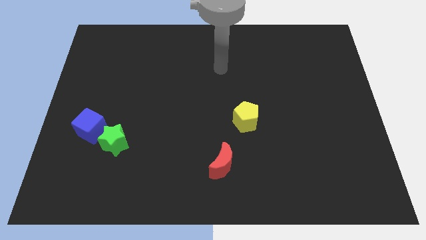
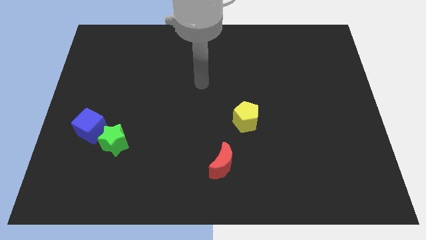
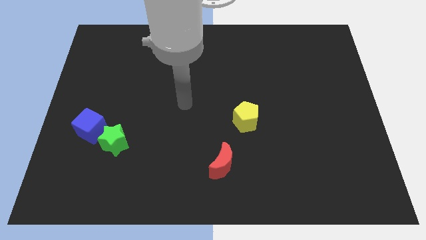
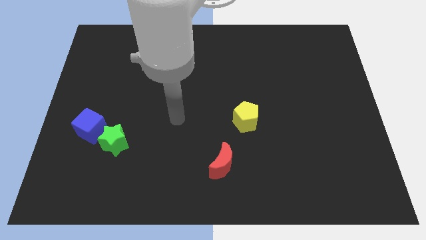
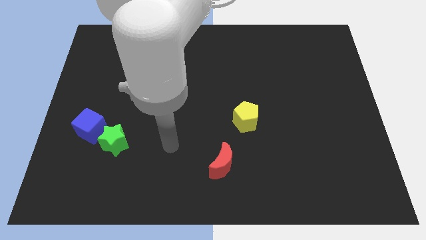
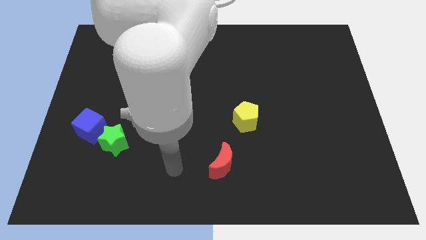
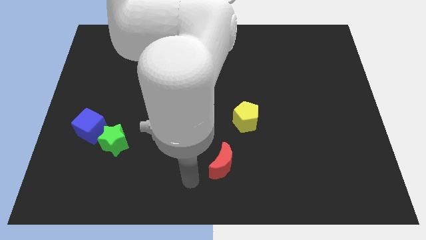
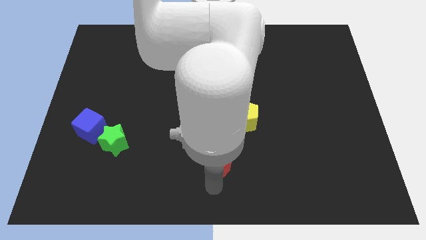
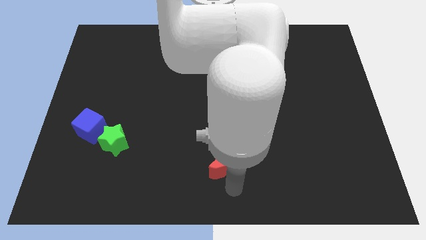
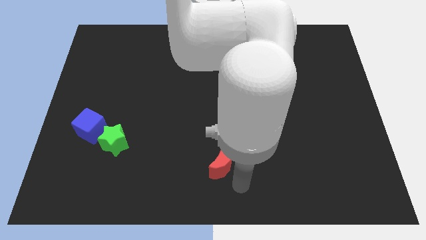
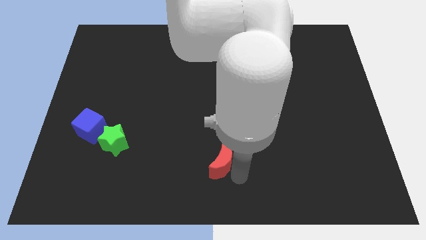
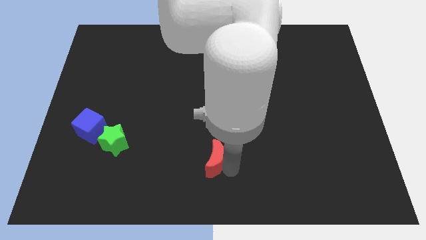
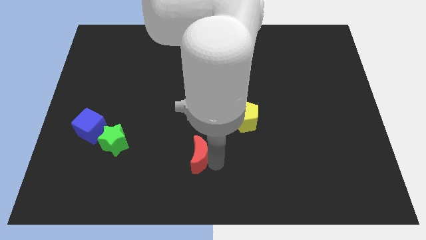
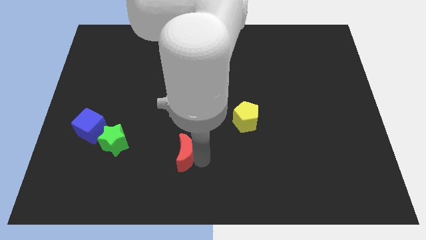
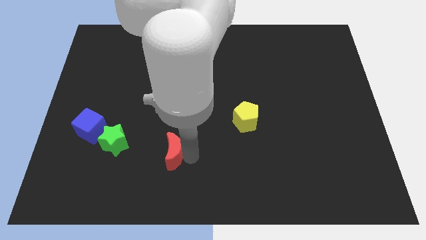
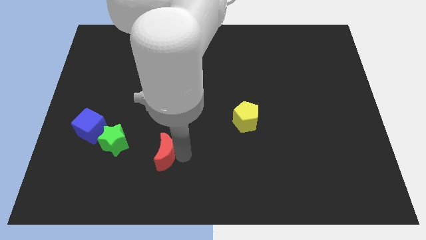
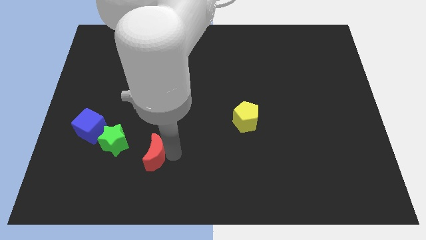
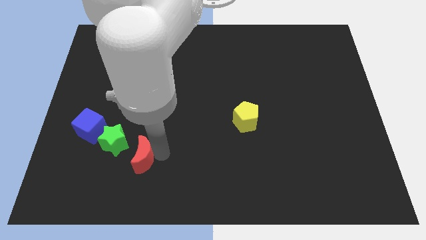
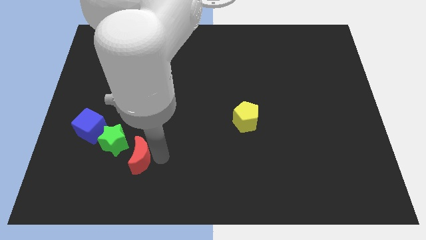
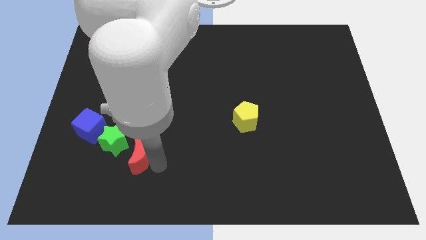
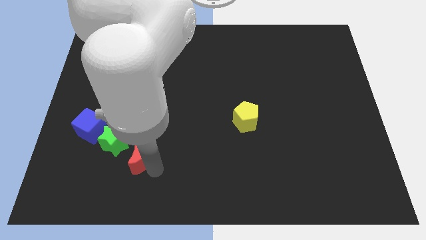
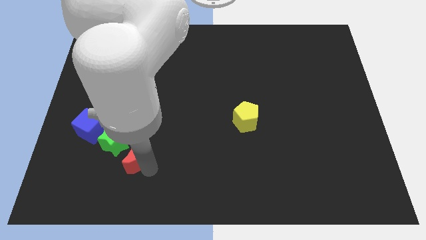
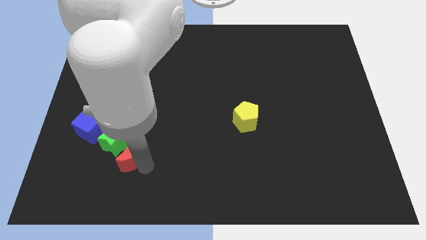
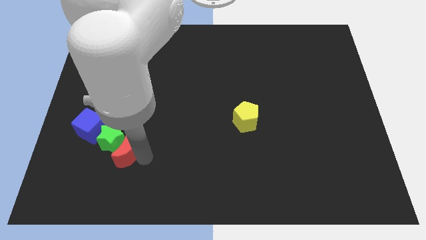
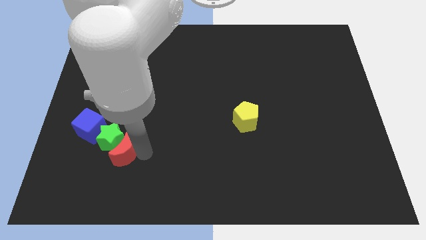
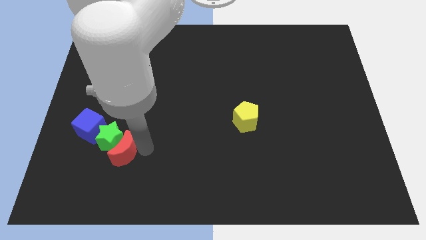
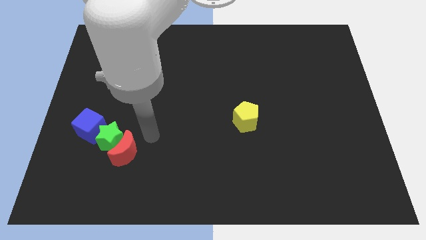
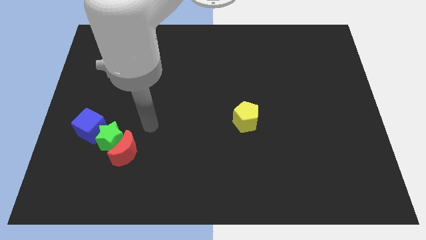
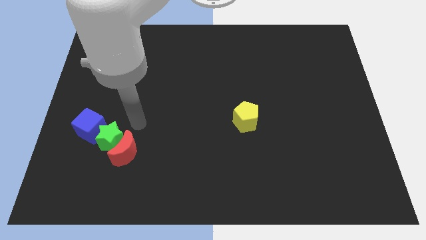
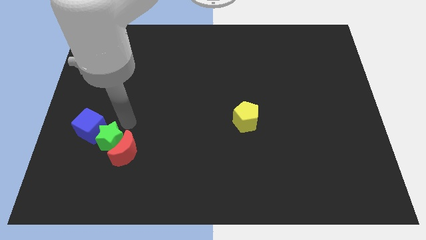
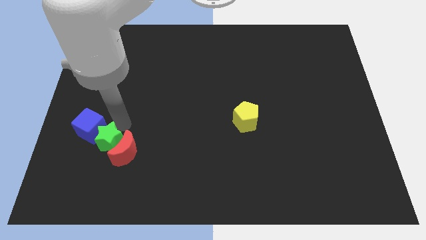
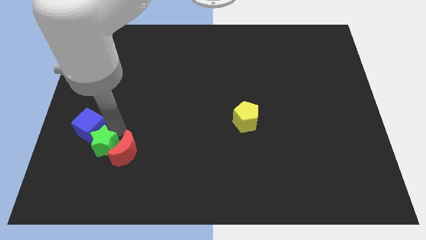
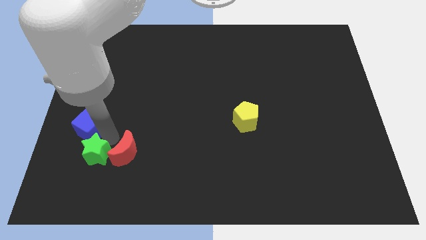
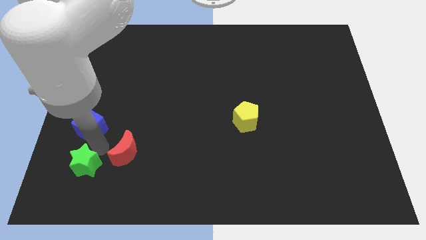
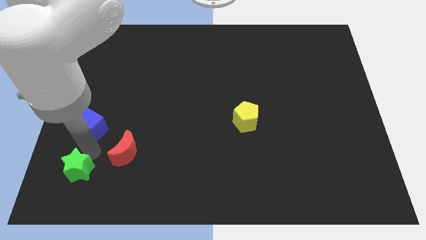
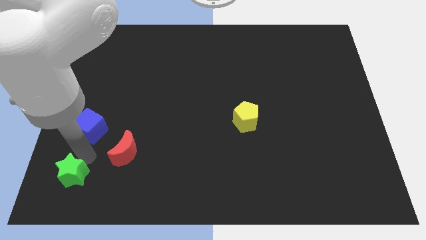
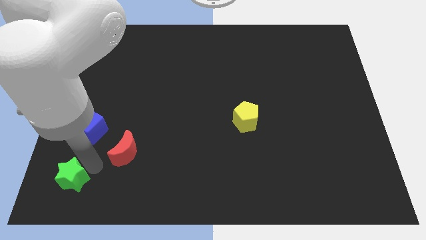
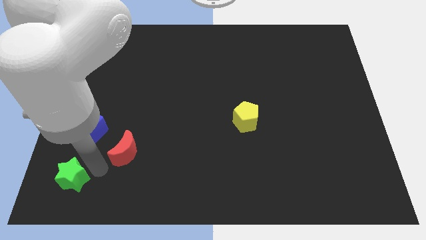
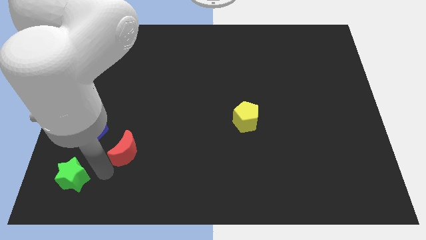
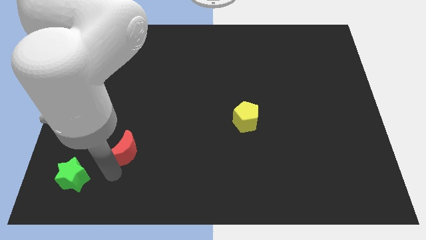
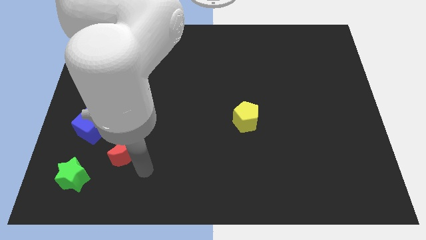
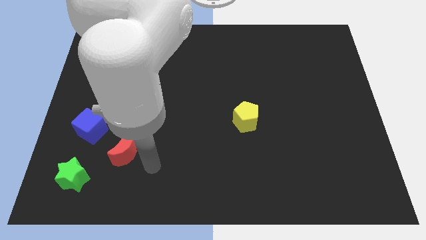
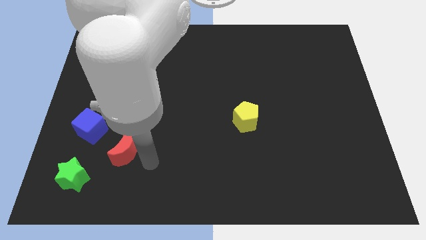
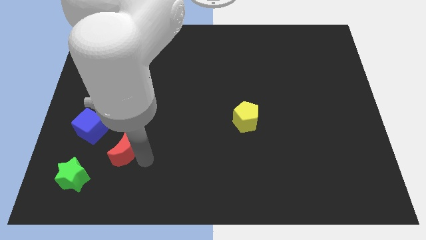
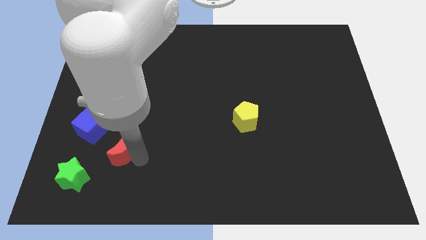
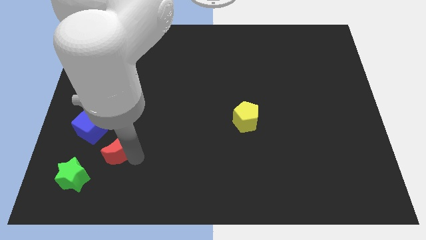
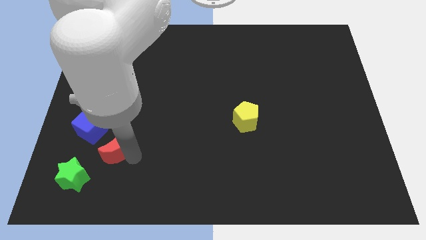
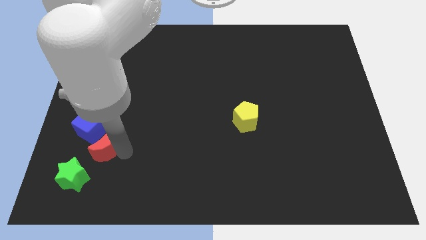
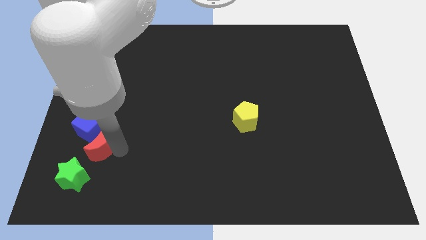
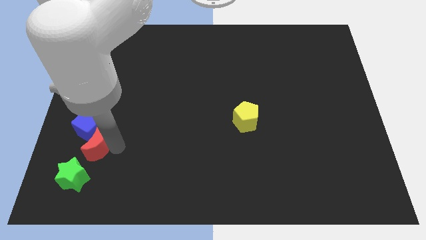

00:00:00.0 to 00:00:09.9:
slide the moon next to the blue block

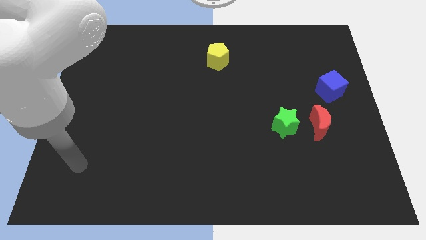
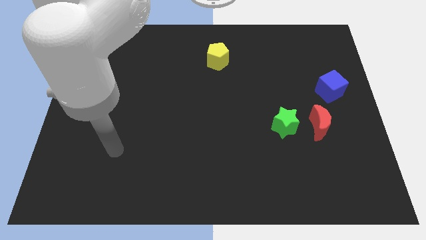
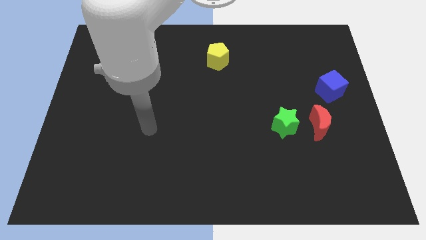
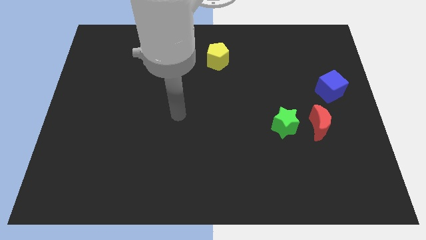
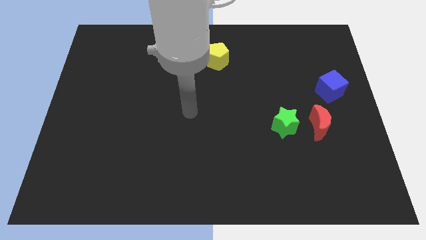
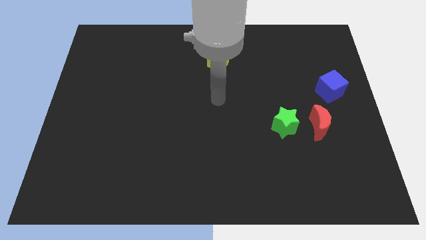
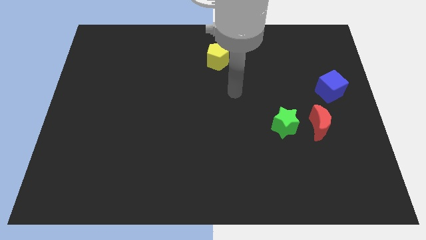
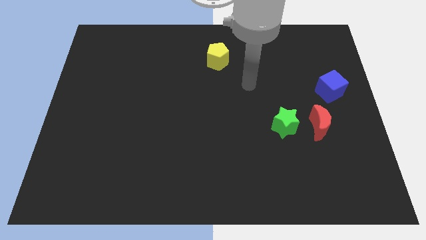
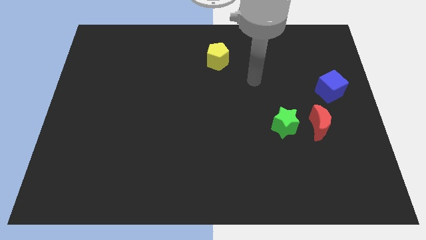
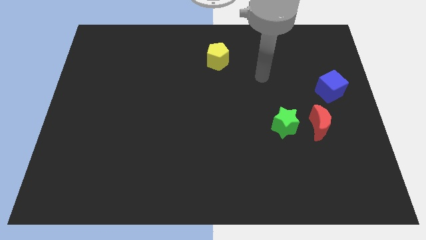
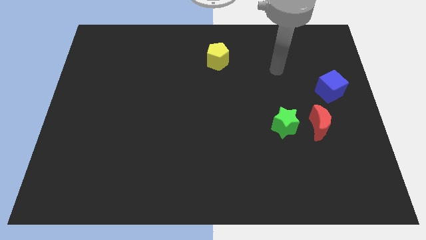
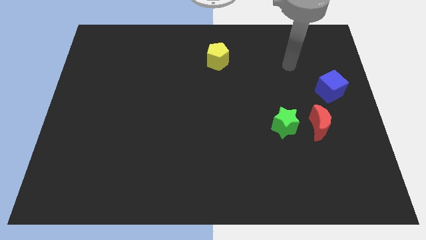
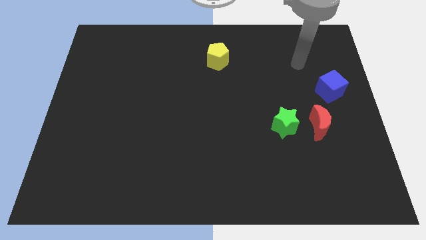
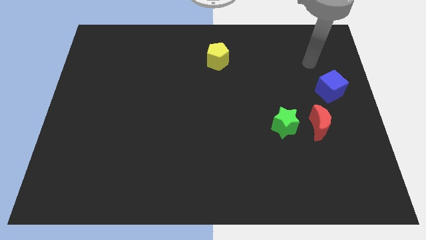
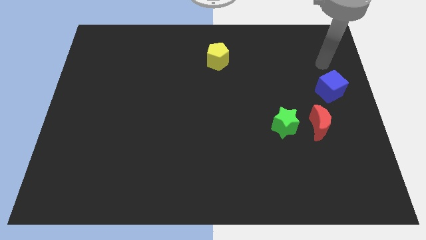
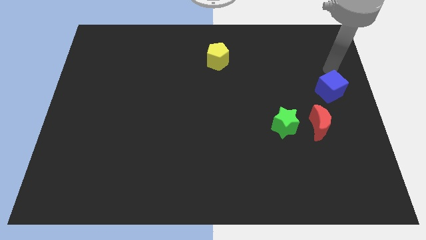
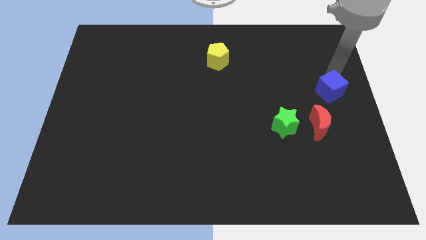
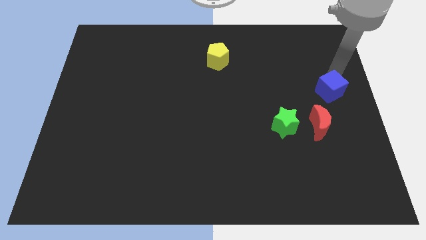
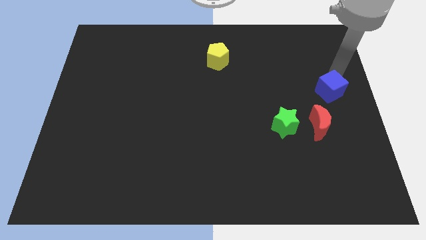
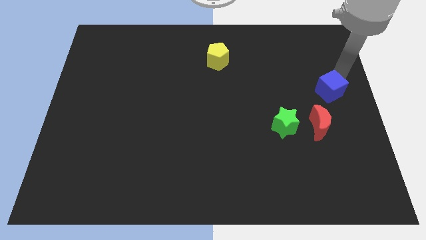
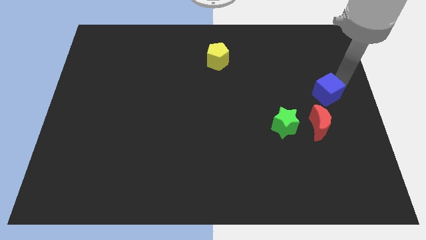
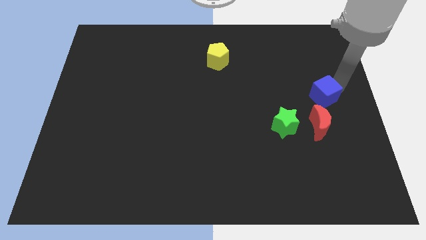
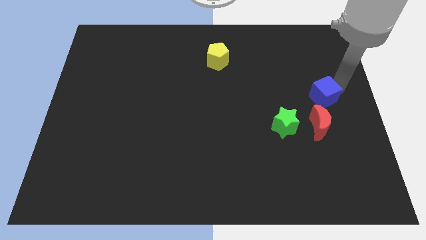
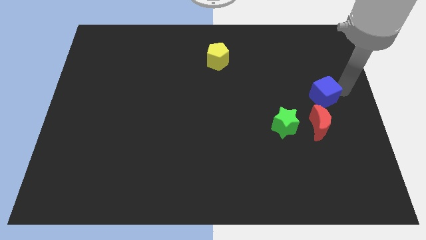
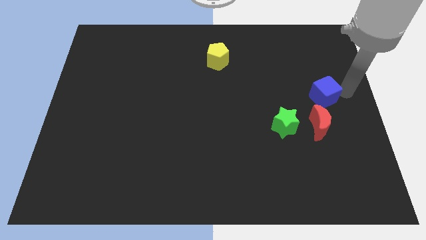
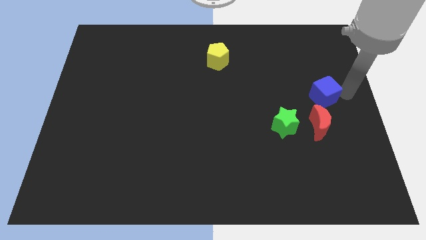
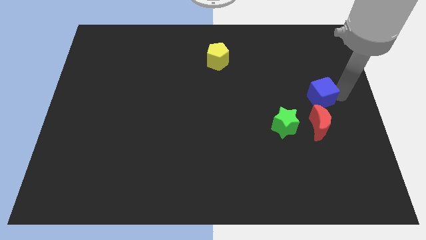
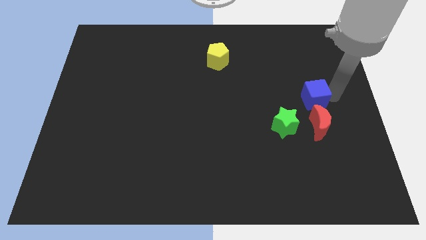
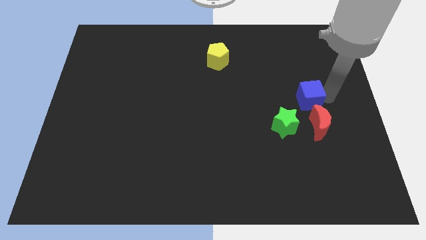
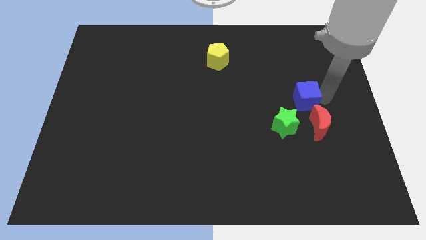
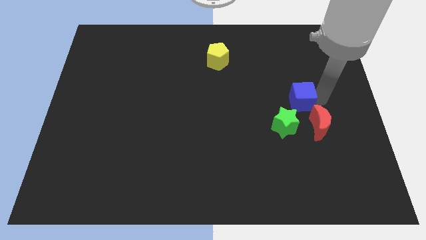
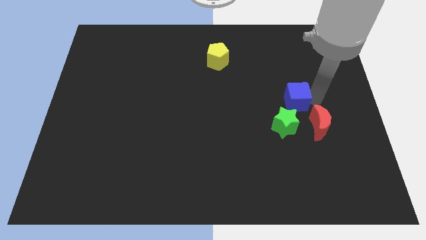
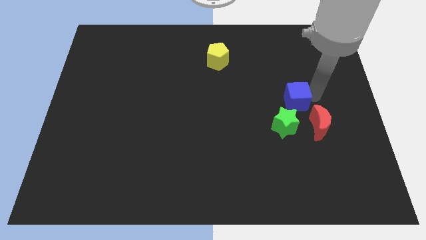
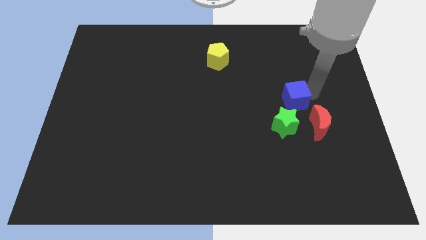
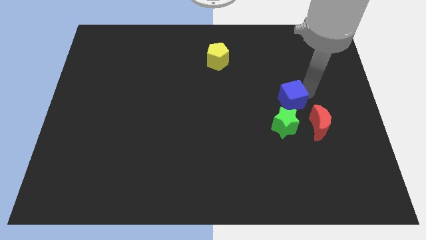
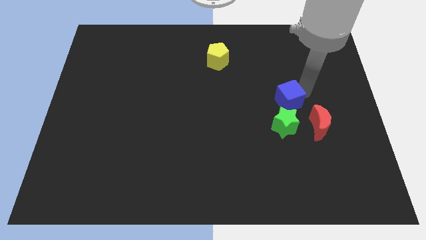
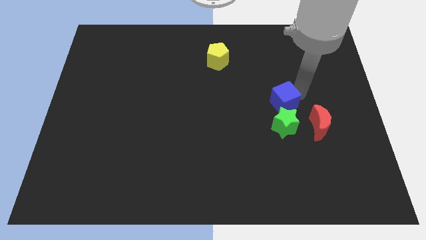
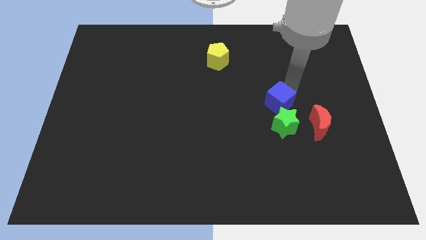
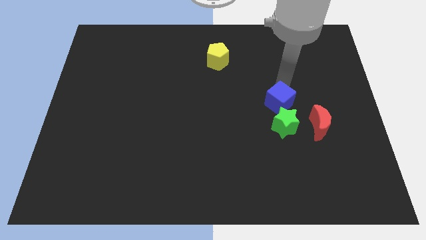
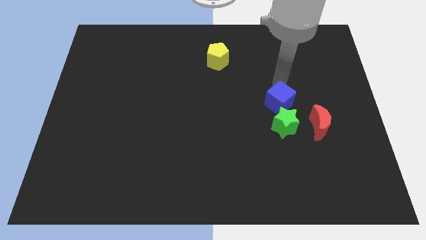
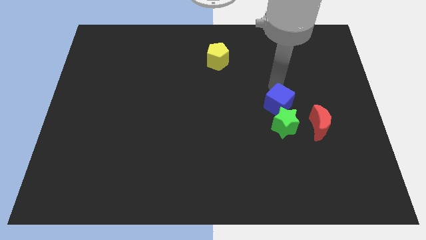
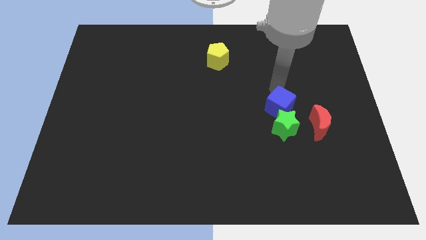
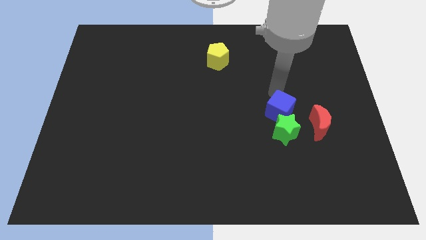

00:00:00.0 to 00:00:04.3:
slide the blue block close to the green star
